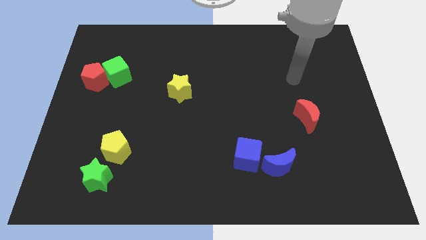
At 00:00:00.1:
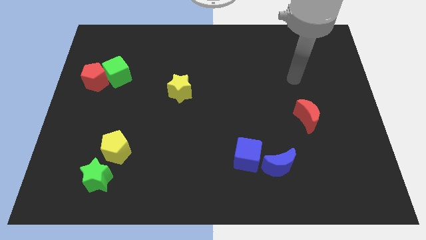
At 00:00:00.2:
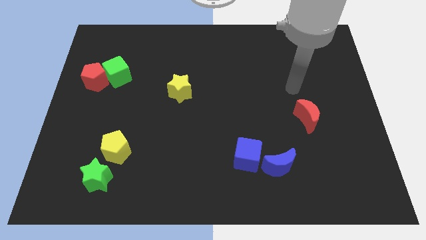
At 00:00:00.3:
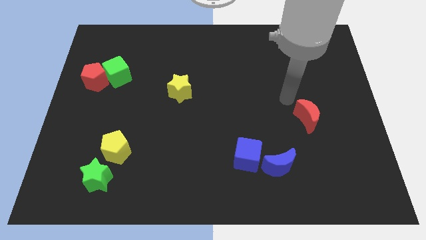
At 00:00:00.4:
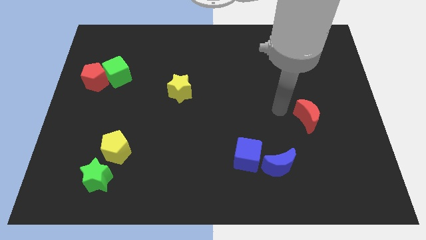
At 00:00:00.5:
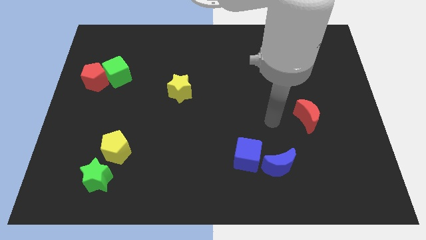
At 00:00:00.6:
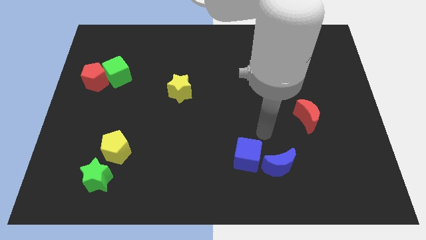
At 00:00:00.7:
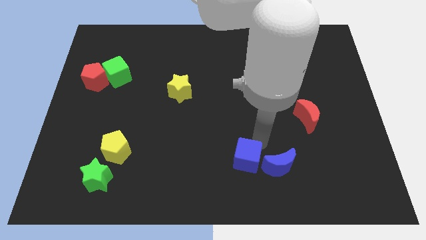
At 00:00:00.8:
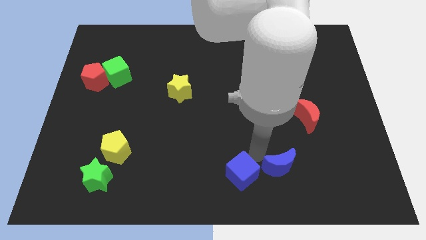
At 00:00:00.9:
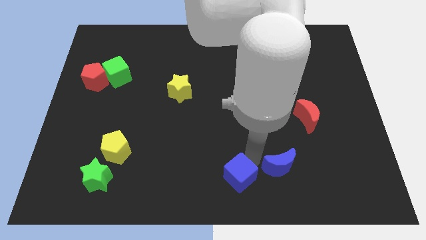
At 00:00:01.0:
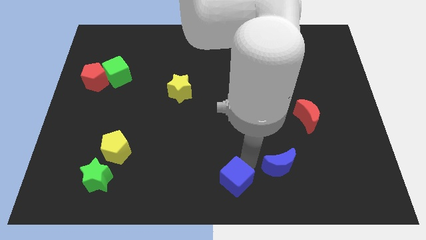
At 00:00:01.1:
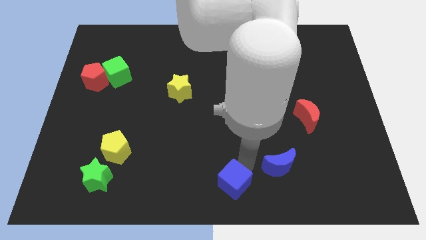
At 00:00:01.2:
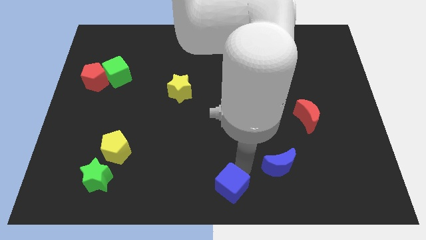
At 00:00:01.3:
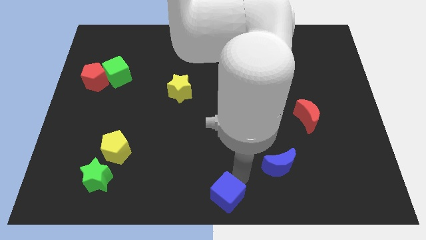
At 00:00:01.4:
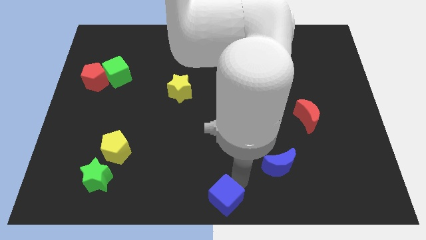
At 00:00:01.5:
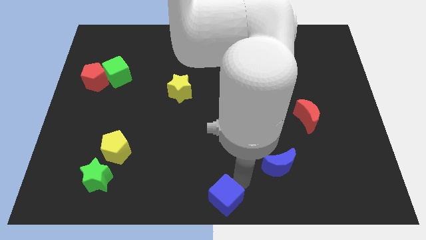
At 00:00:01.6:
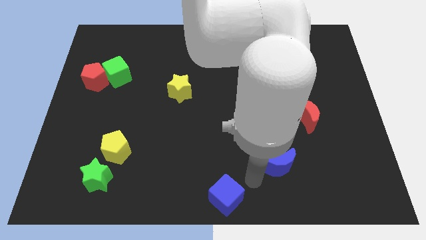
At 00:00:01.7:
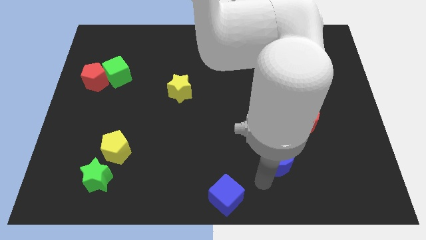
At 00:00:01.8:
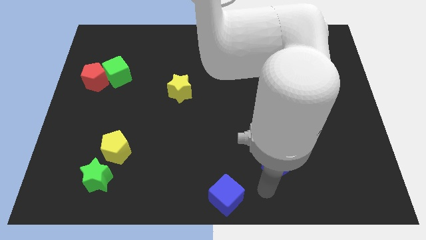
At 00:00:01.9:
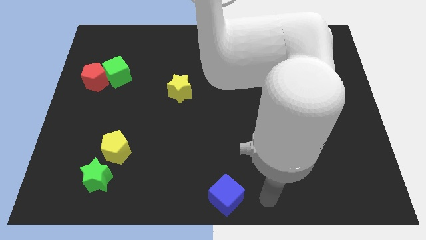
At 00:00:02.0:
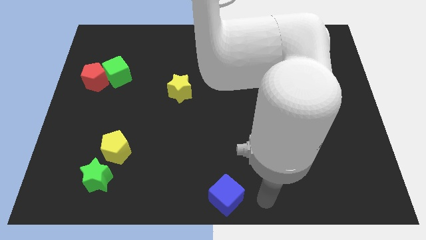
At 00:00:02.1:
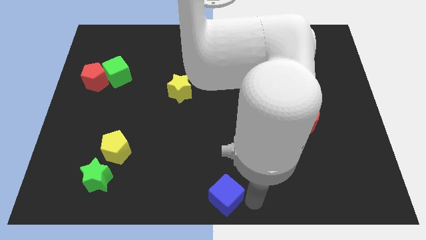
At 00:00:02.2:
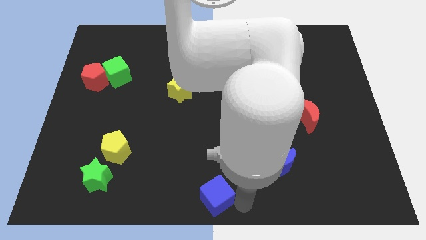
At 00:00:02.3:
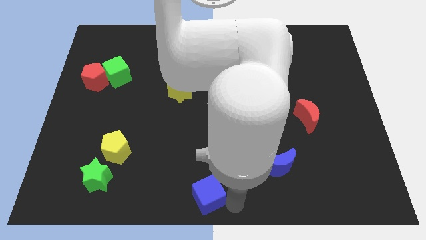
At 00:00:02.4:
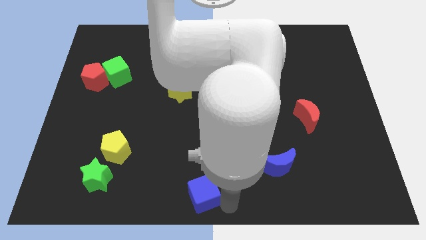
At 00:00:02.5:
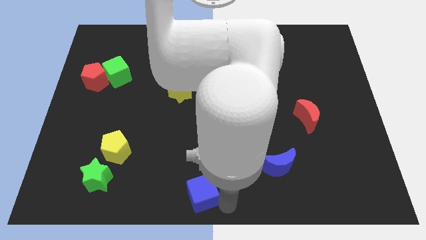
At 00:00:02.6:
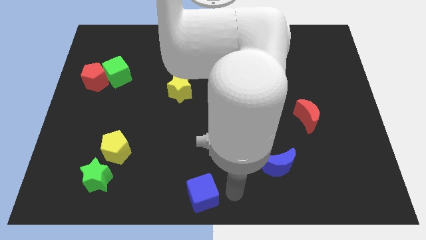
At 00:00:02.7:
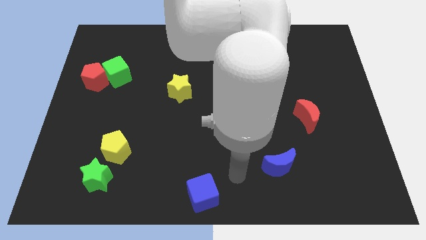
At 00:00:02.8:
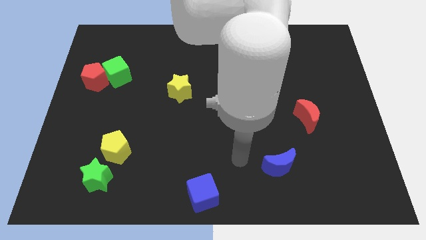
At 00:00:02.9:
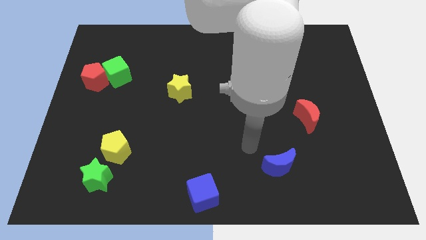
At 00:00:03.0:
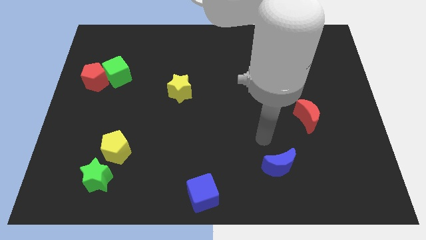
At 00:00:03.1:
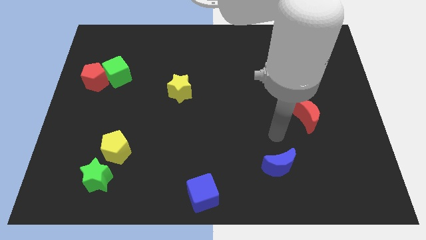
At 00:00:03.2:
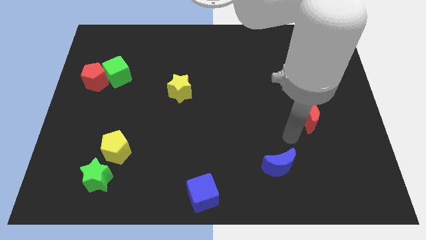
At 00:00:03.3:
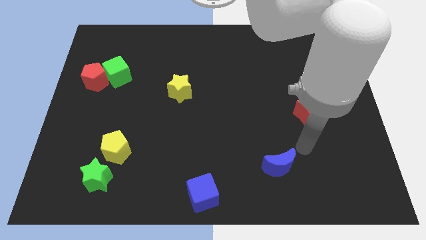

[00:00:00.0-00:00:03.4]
place the blue cube at the bottom center of the board

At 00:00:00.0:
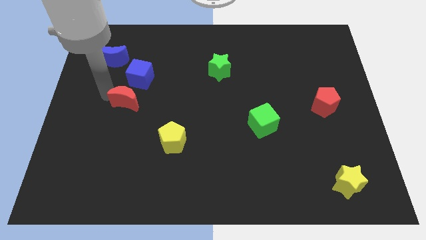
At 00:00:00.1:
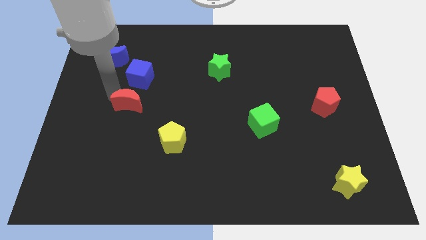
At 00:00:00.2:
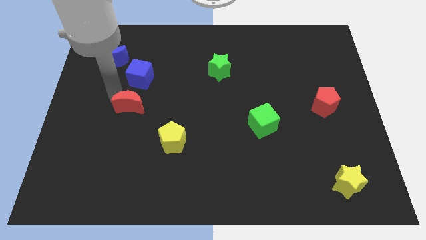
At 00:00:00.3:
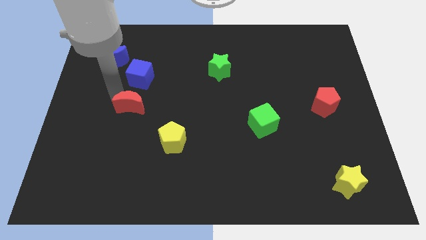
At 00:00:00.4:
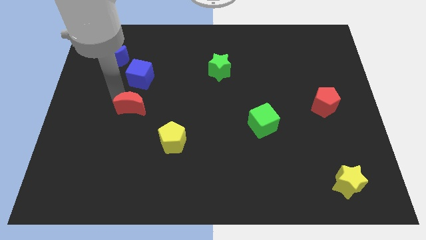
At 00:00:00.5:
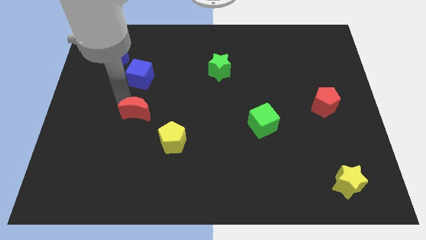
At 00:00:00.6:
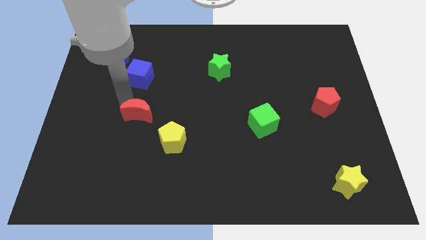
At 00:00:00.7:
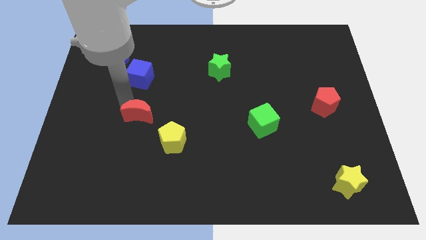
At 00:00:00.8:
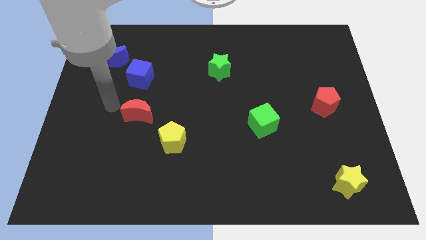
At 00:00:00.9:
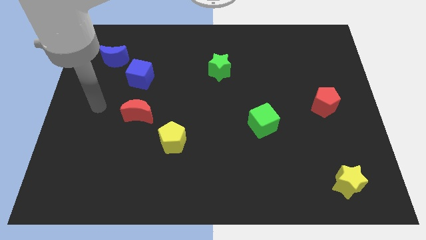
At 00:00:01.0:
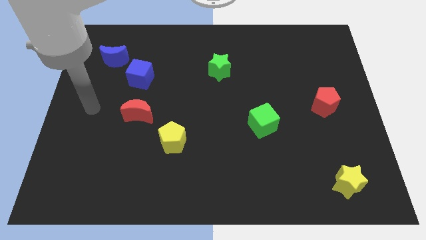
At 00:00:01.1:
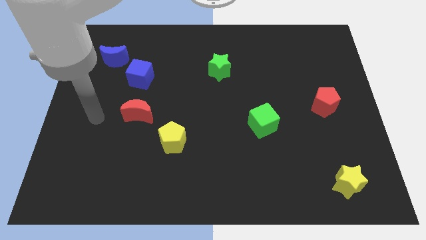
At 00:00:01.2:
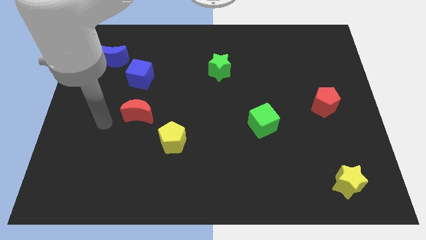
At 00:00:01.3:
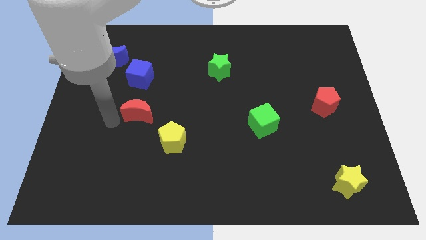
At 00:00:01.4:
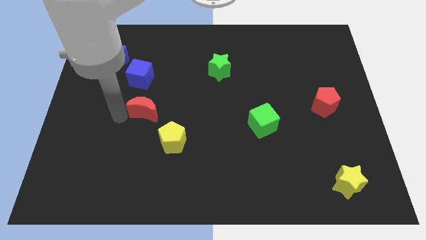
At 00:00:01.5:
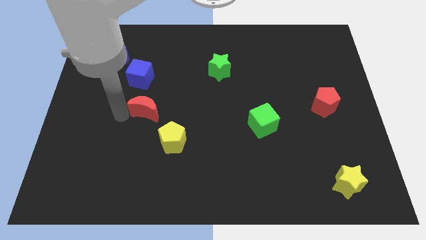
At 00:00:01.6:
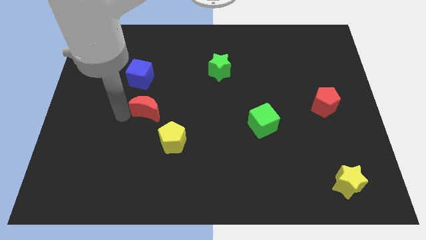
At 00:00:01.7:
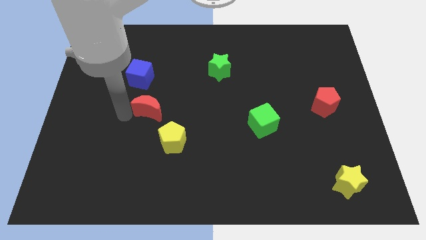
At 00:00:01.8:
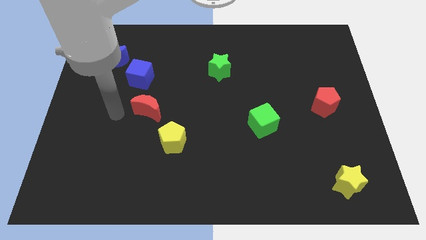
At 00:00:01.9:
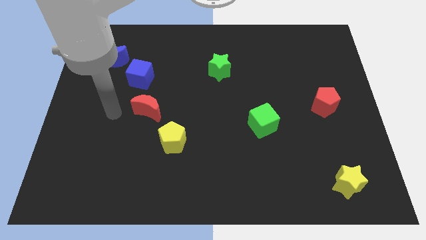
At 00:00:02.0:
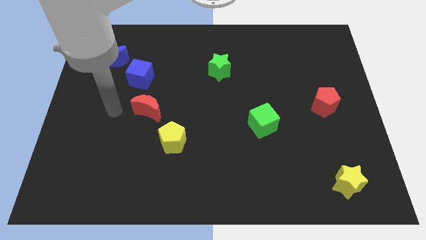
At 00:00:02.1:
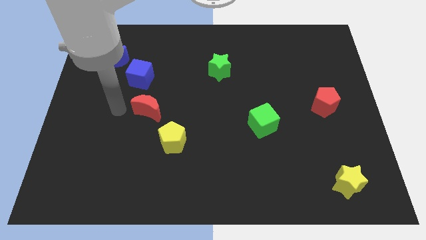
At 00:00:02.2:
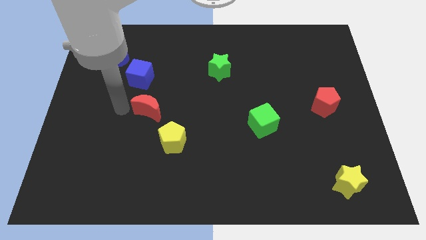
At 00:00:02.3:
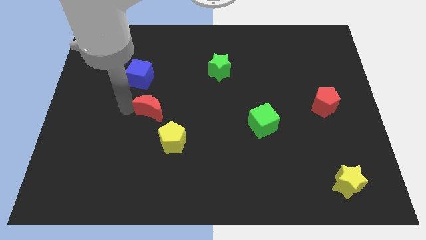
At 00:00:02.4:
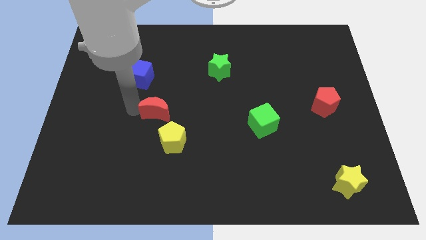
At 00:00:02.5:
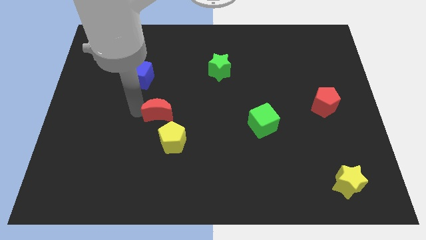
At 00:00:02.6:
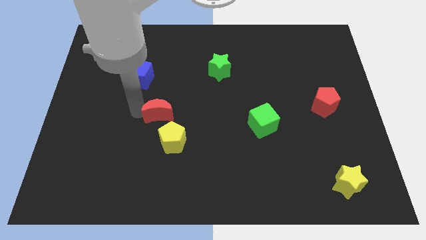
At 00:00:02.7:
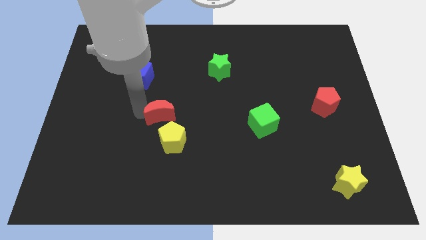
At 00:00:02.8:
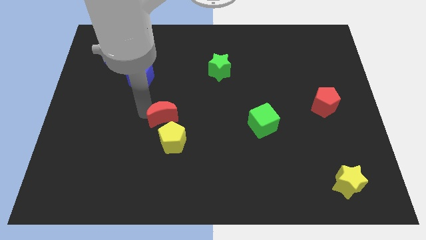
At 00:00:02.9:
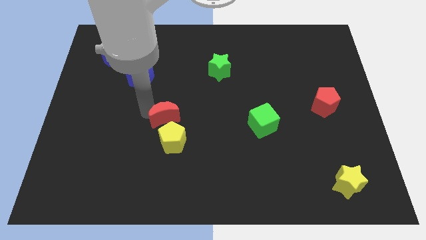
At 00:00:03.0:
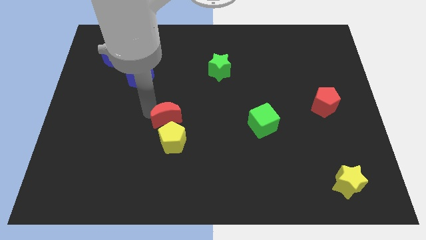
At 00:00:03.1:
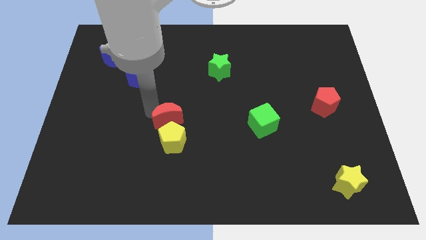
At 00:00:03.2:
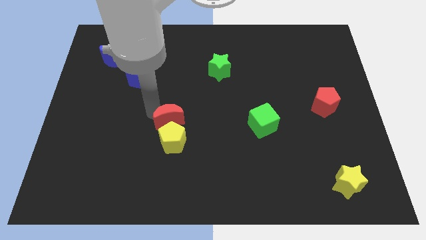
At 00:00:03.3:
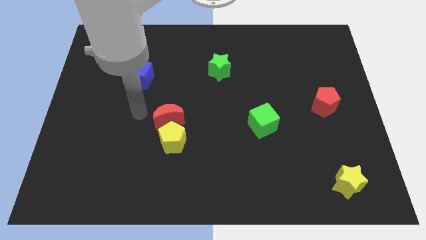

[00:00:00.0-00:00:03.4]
move the red moon cose to the top side of the yellow pentagon

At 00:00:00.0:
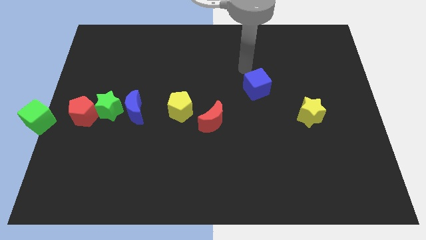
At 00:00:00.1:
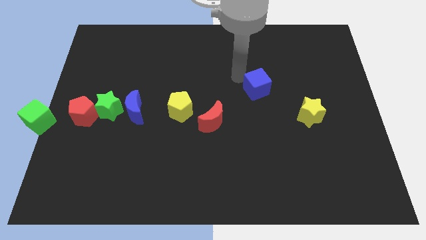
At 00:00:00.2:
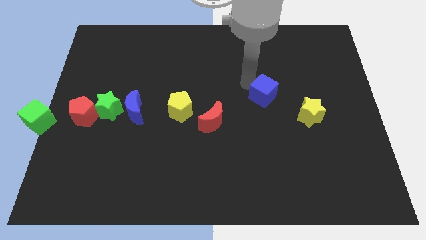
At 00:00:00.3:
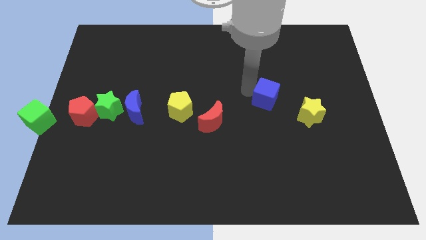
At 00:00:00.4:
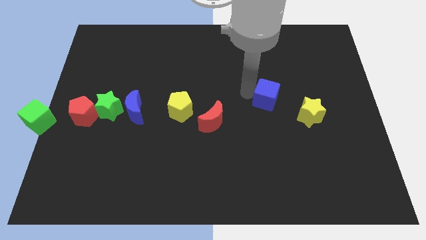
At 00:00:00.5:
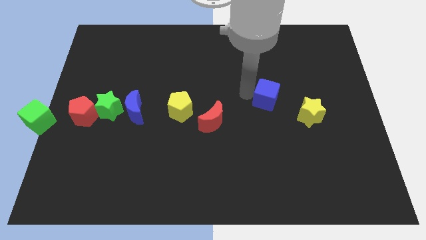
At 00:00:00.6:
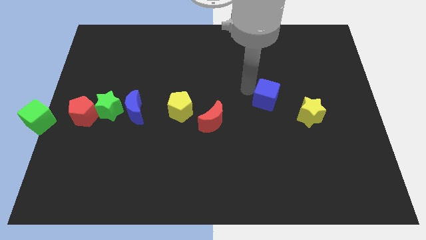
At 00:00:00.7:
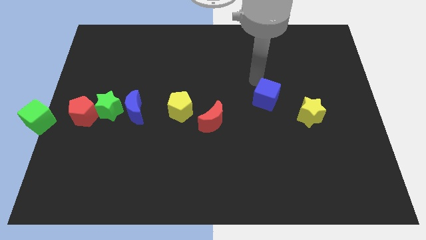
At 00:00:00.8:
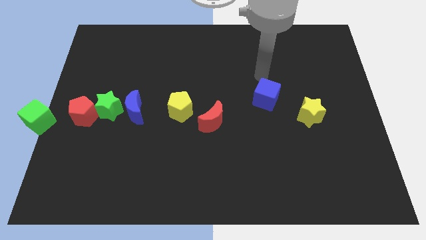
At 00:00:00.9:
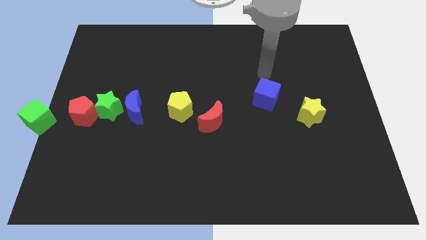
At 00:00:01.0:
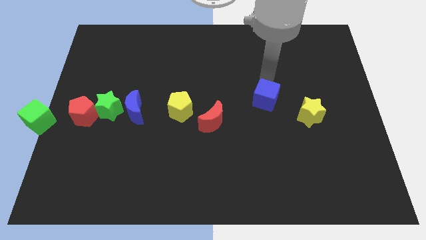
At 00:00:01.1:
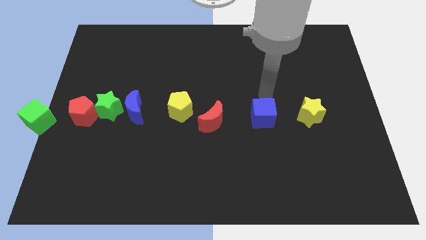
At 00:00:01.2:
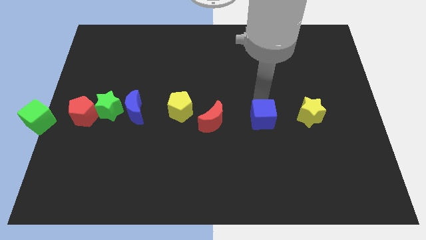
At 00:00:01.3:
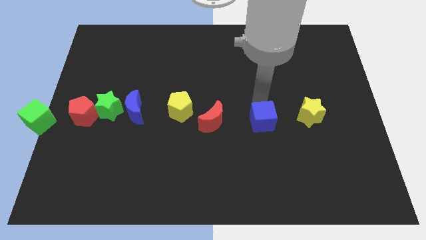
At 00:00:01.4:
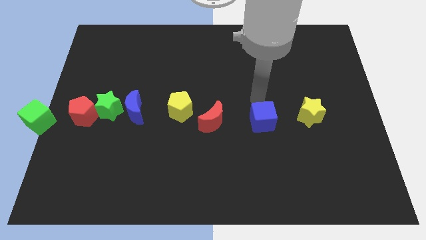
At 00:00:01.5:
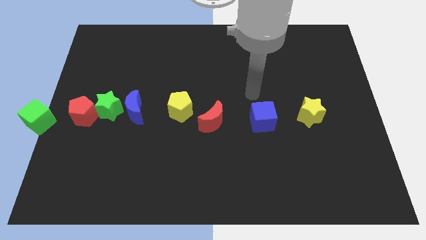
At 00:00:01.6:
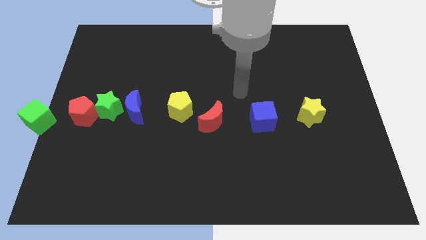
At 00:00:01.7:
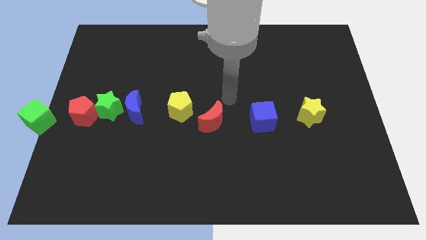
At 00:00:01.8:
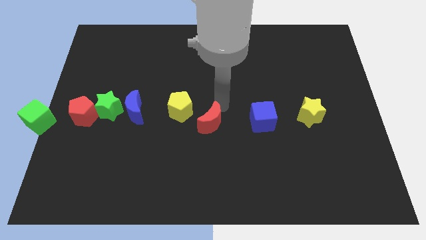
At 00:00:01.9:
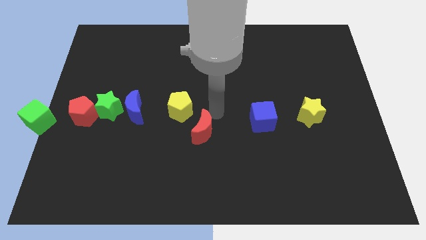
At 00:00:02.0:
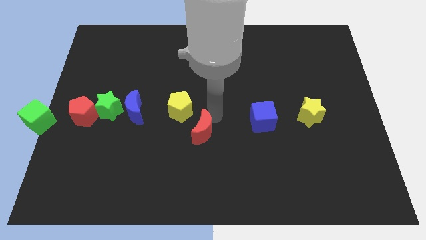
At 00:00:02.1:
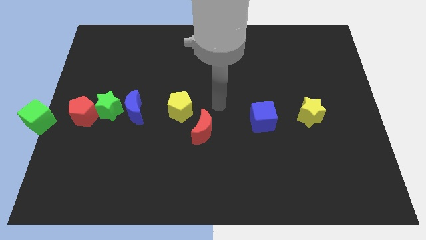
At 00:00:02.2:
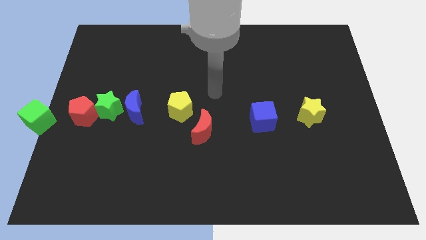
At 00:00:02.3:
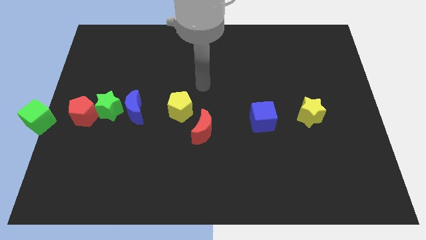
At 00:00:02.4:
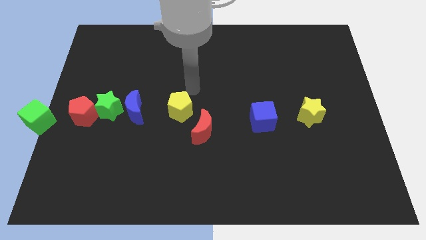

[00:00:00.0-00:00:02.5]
move the blue cube left to the yellow star
